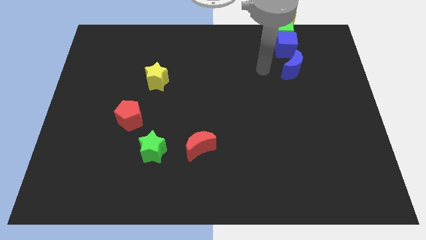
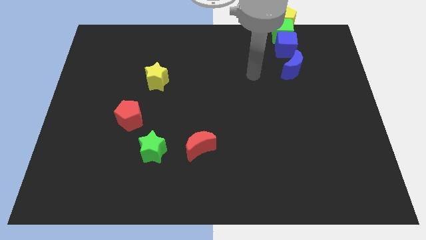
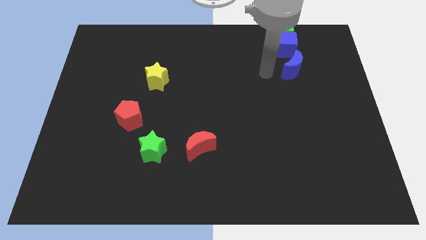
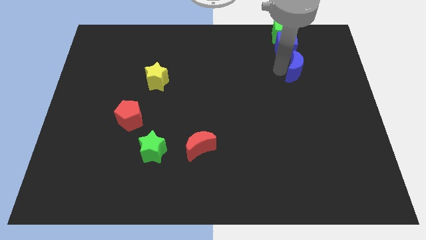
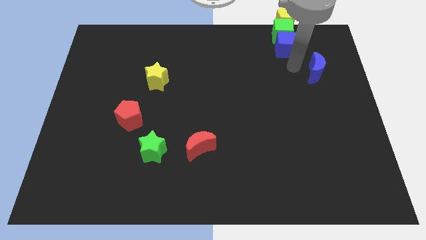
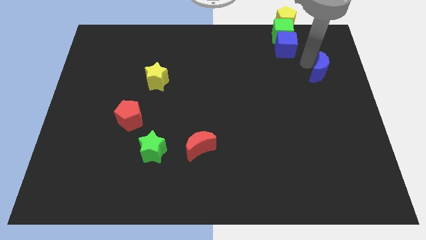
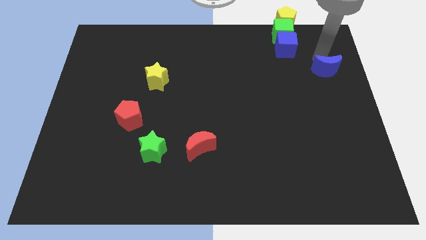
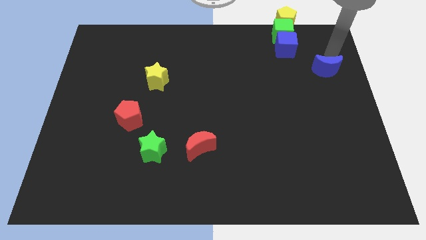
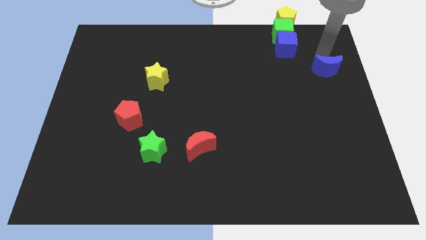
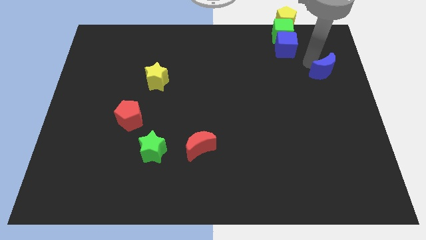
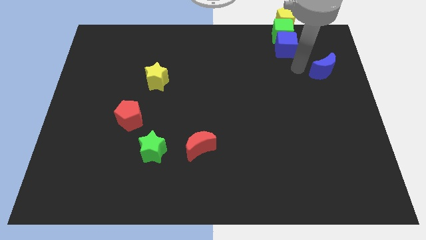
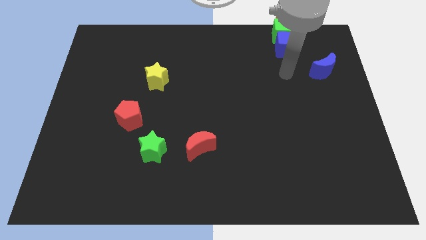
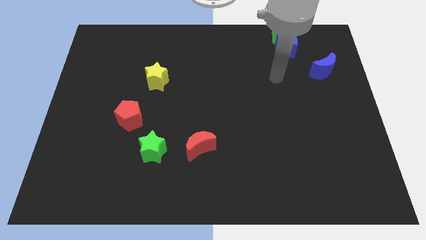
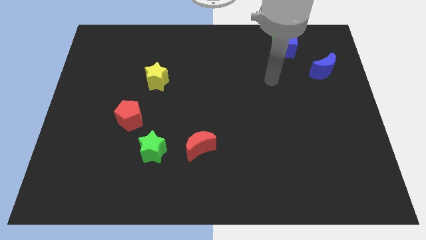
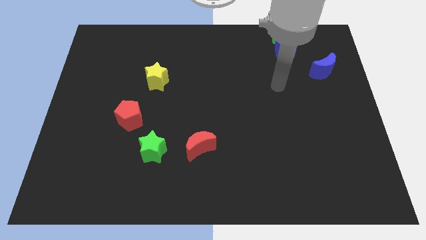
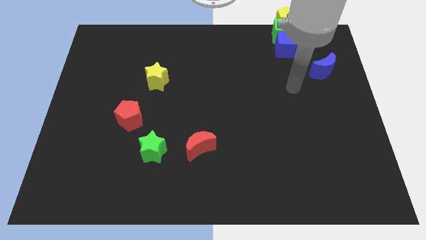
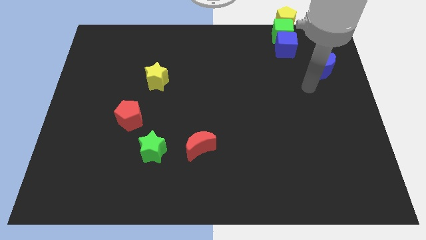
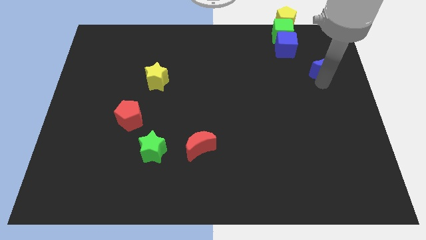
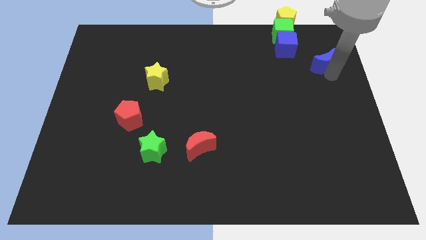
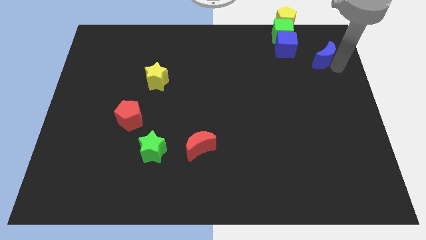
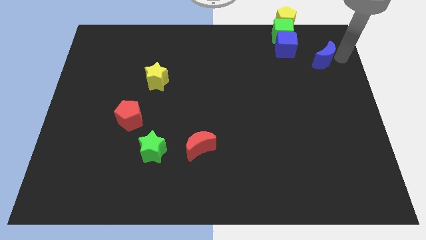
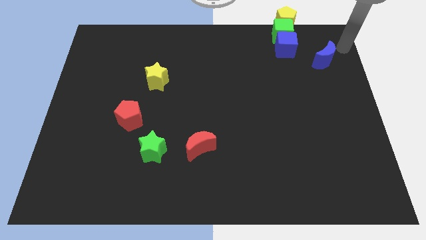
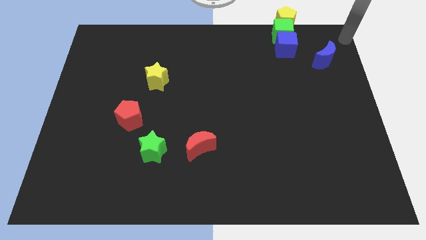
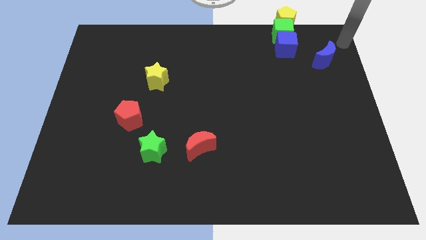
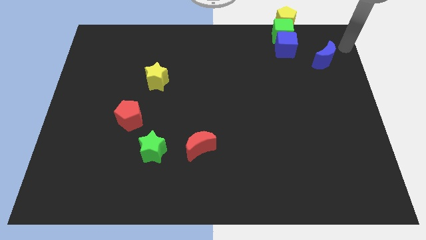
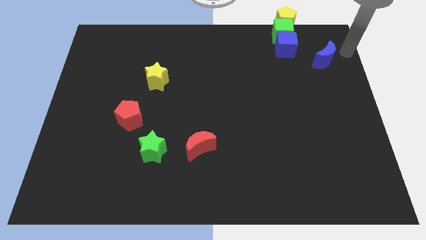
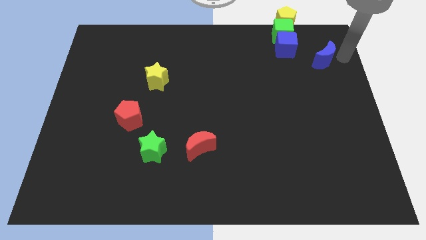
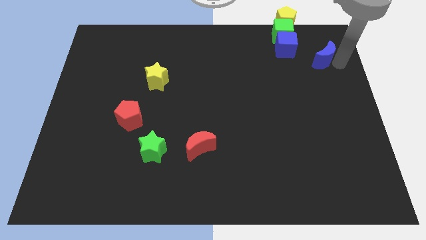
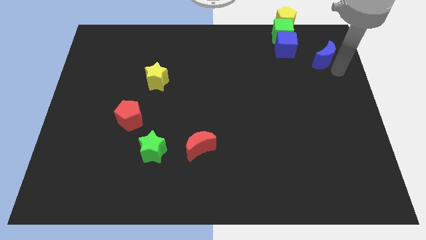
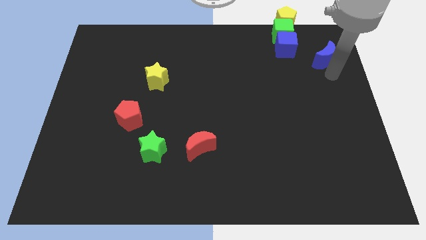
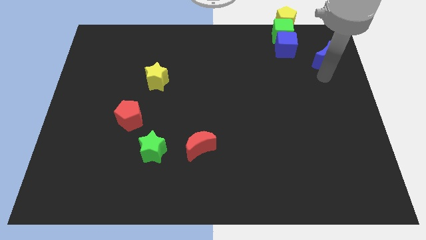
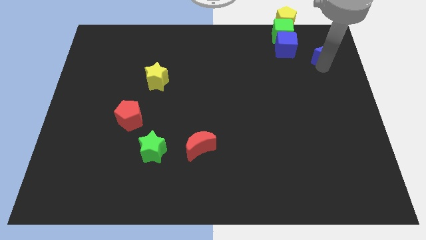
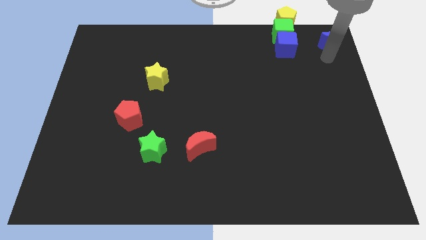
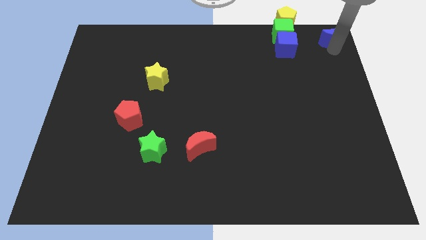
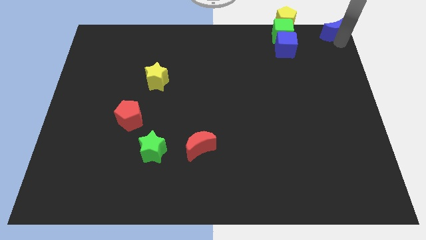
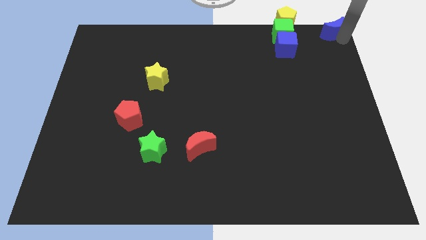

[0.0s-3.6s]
move the blue moon to the top right corner of the board

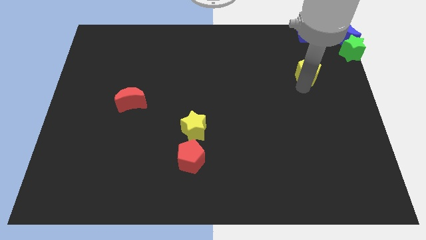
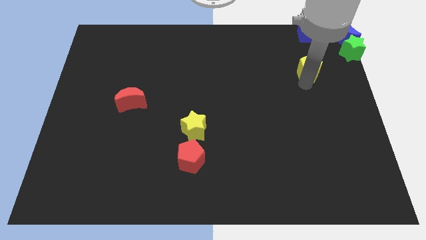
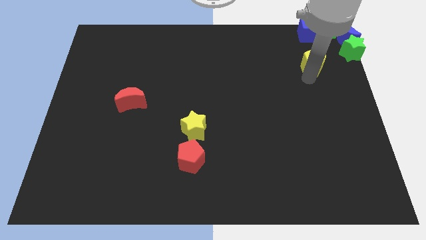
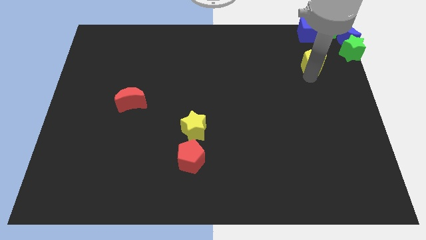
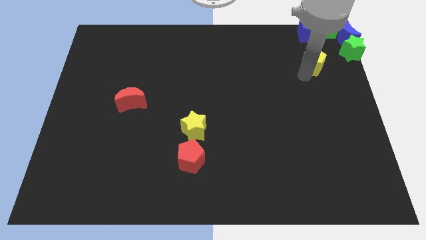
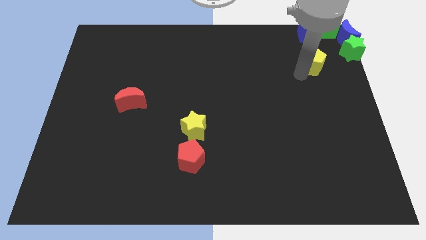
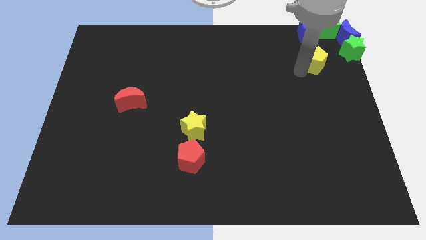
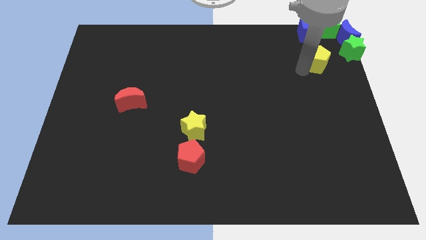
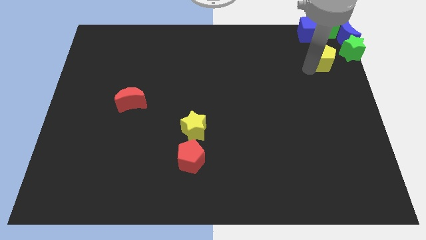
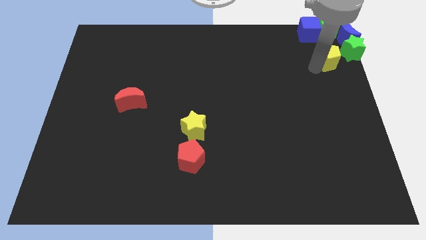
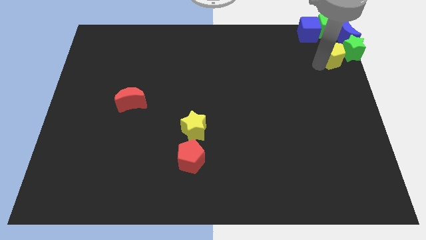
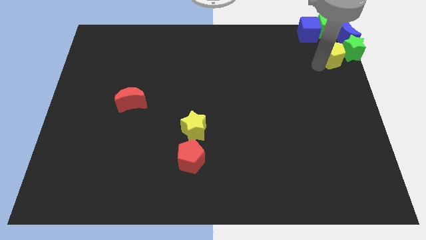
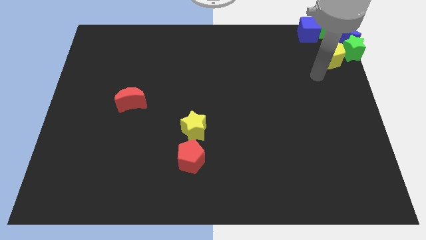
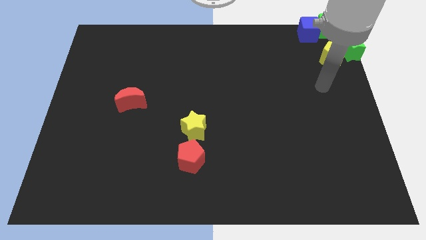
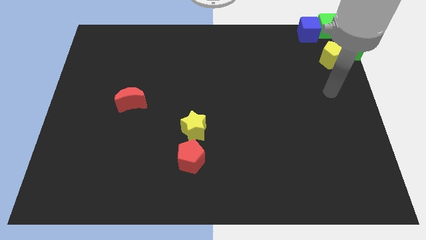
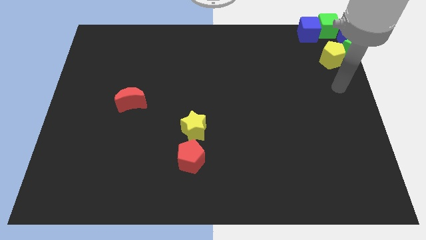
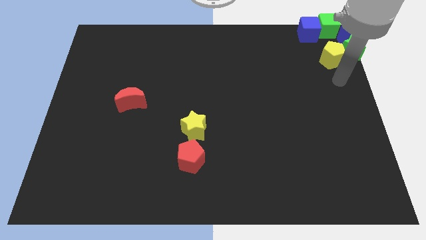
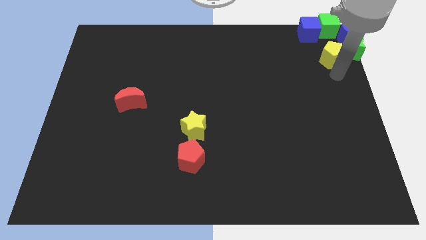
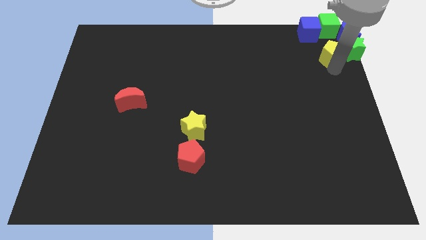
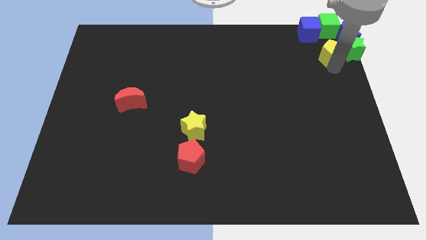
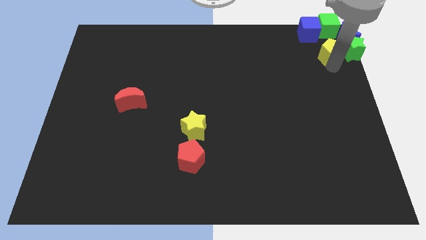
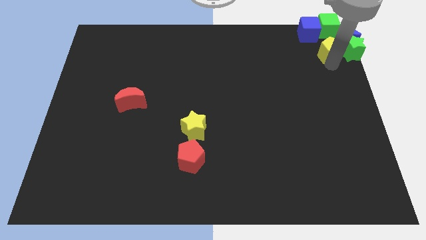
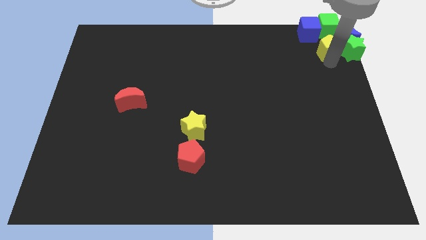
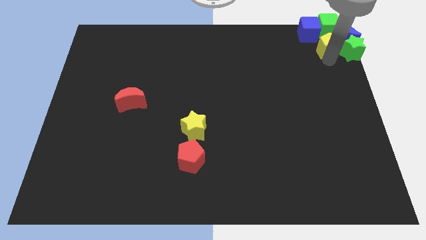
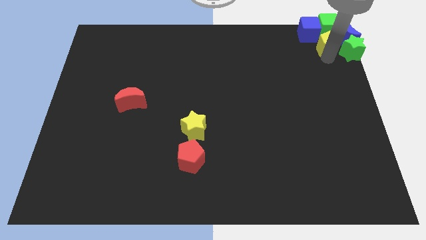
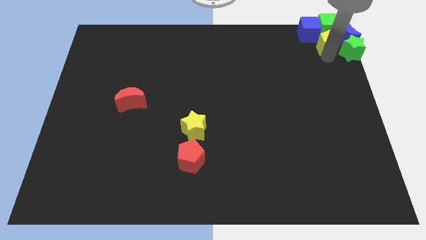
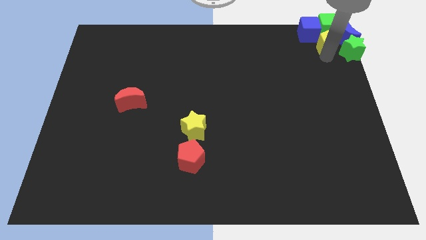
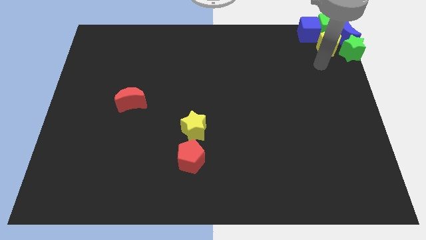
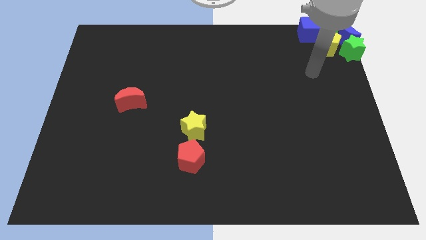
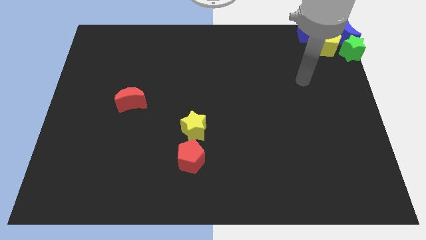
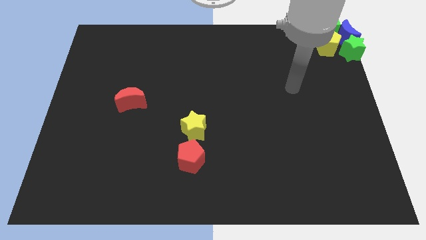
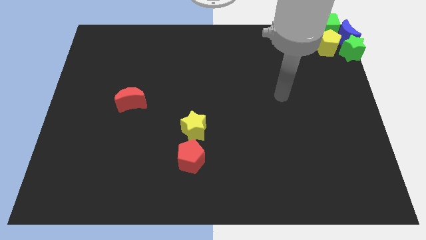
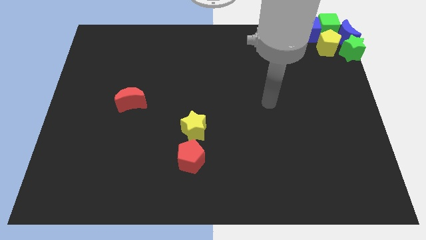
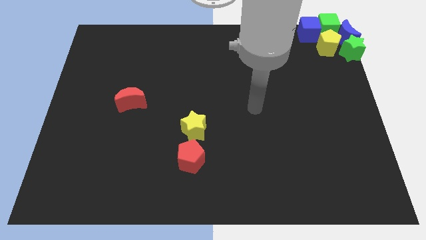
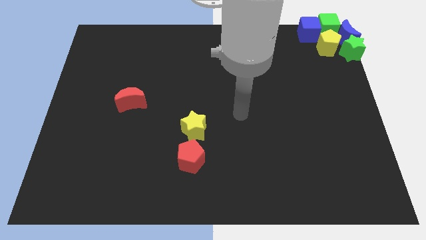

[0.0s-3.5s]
add the yellow pentagon to the group of blocks at the top right corner of the board

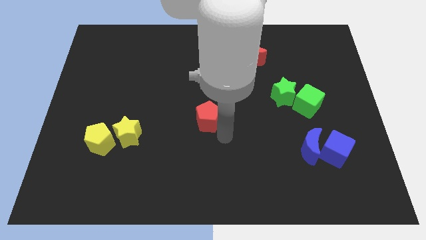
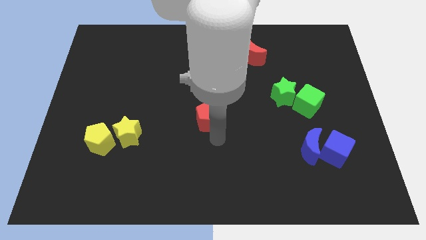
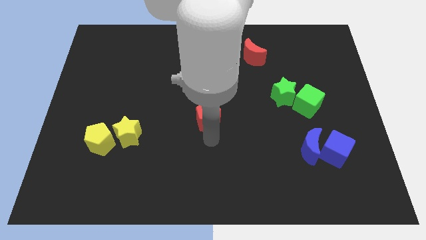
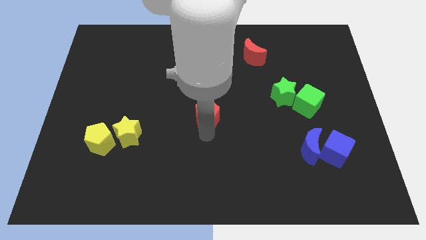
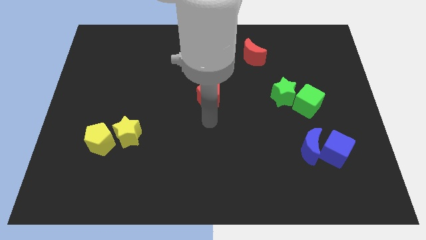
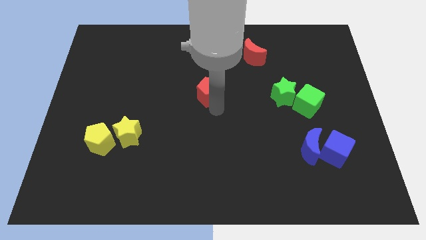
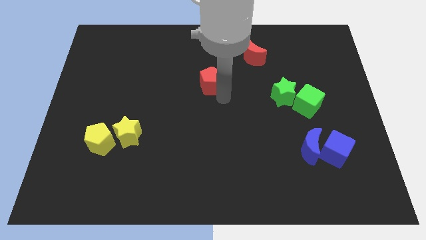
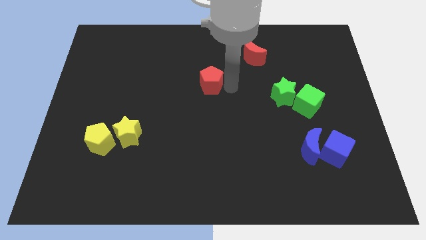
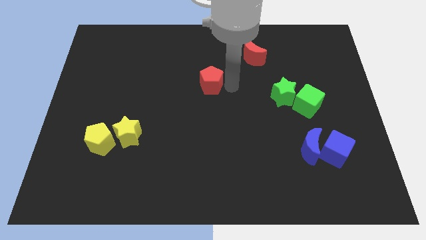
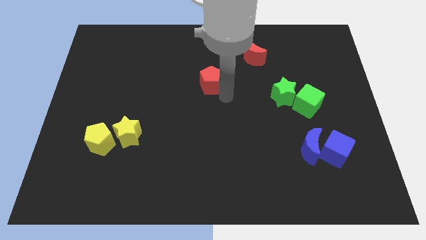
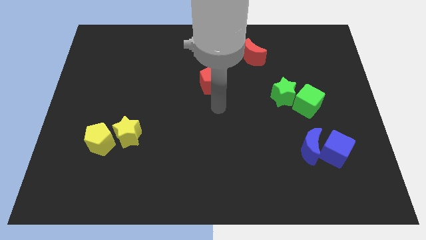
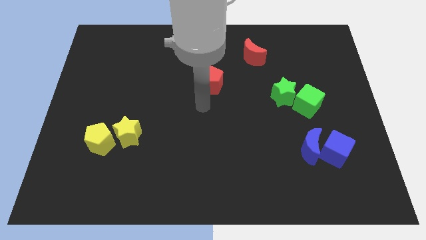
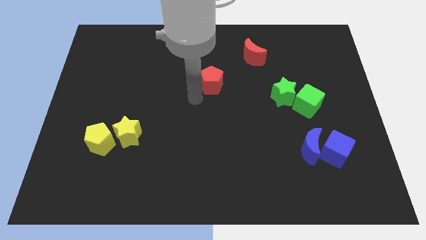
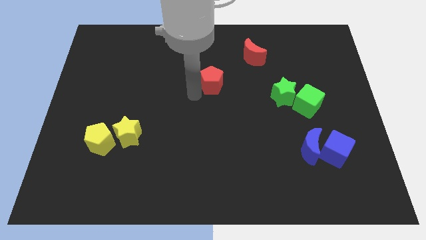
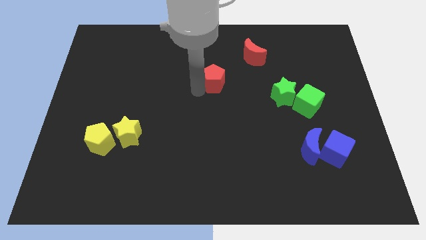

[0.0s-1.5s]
move the red pentagon towards the top side of the board

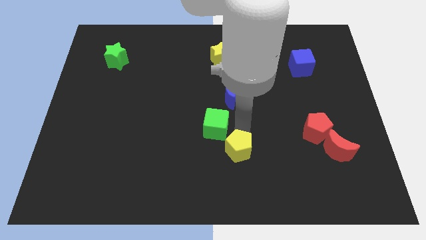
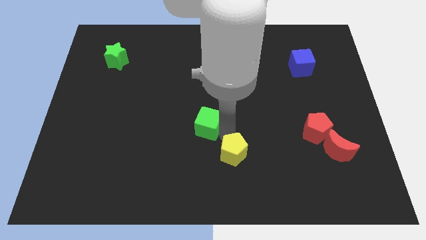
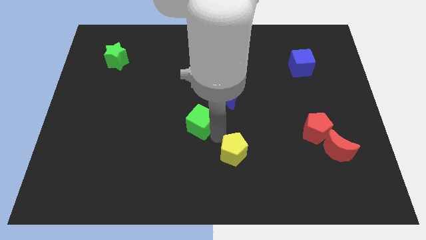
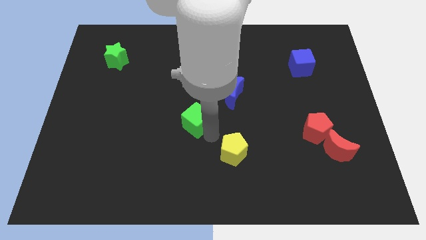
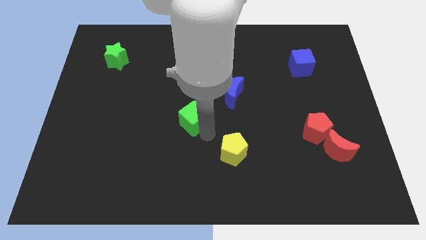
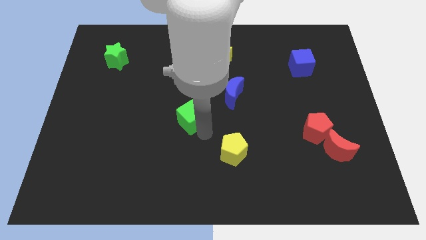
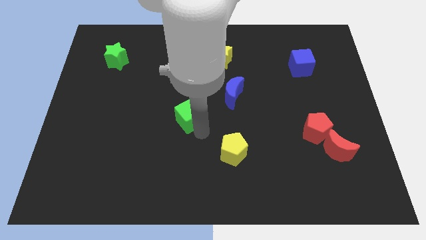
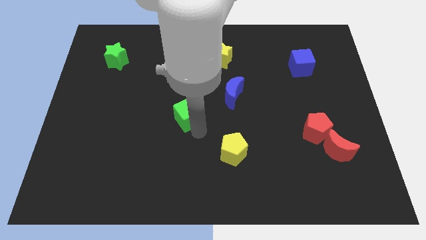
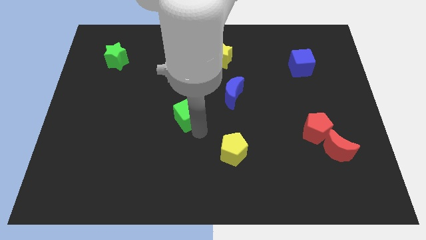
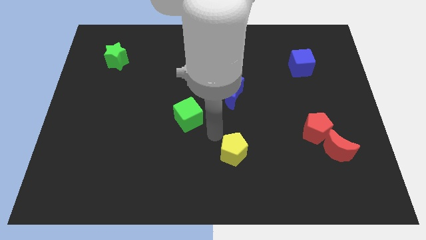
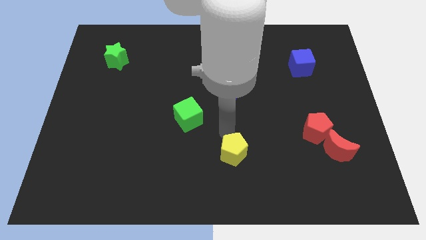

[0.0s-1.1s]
move the green cube to the top left of the yellow pentagon
